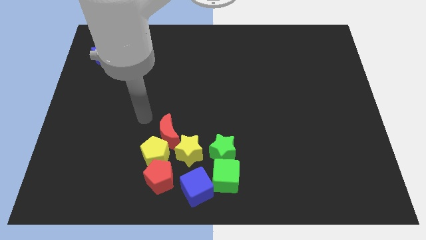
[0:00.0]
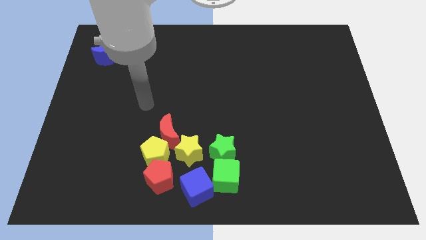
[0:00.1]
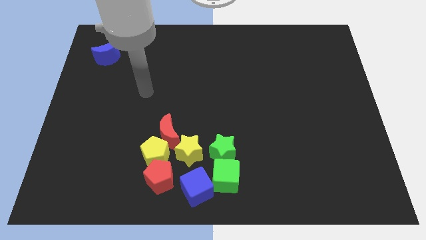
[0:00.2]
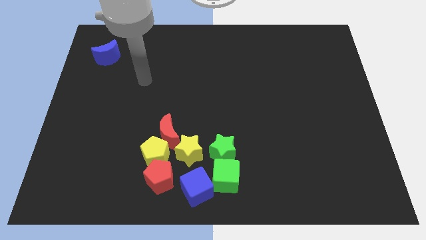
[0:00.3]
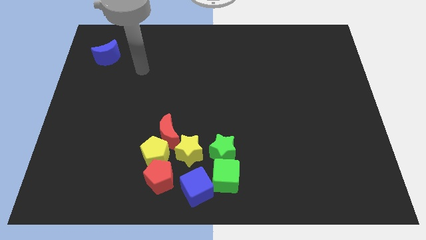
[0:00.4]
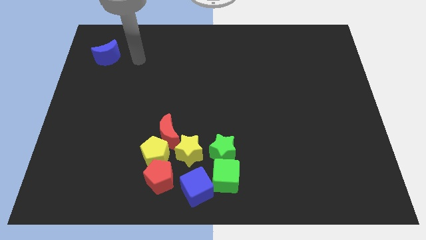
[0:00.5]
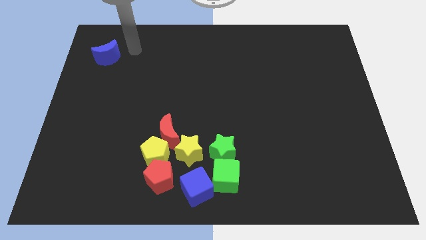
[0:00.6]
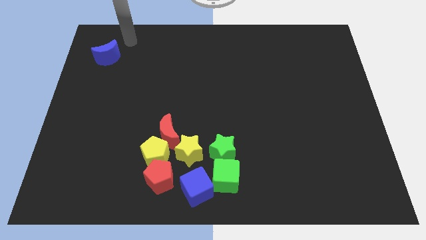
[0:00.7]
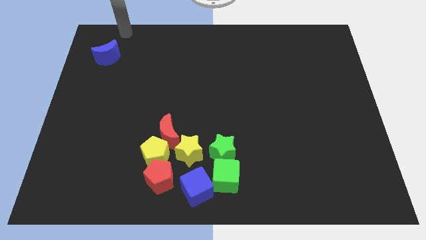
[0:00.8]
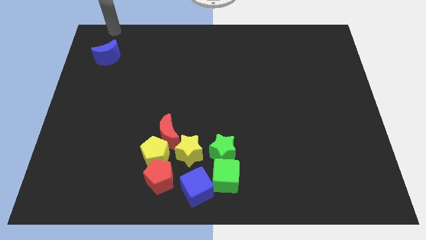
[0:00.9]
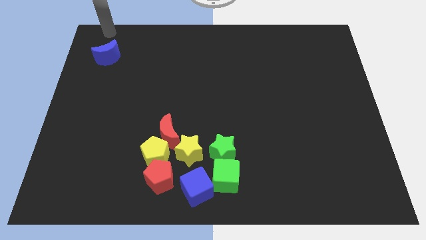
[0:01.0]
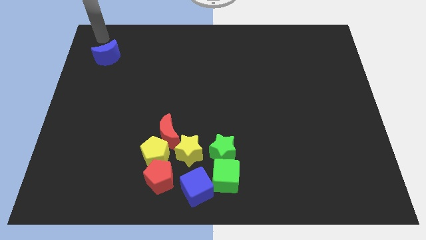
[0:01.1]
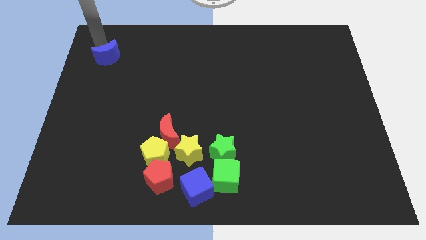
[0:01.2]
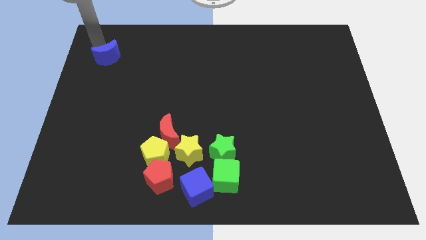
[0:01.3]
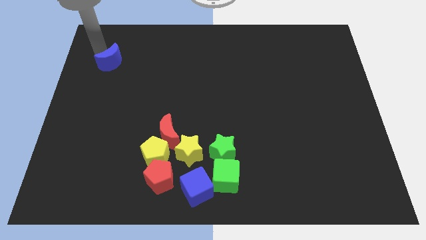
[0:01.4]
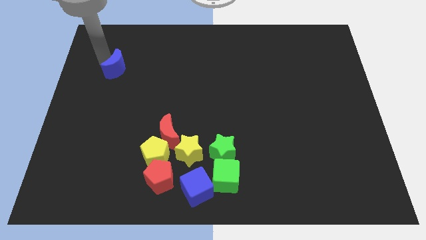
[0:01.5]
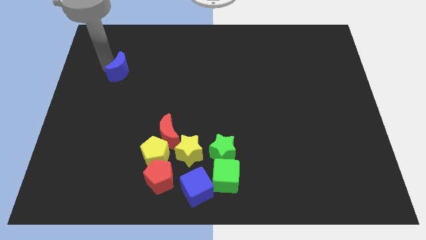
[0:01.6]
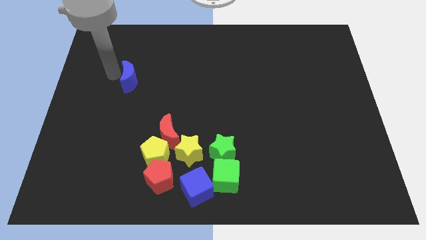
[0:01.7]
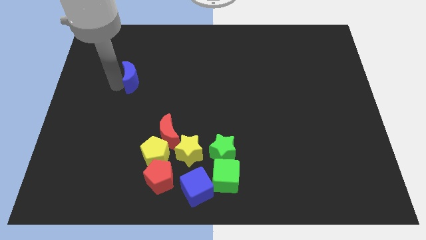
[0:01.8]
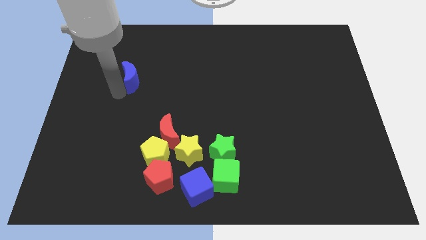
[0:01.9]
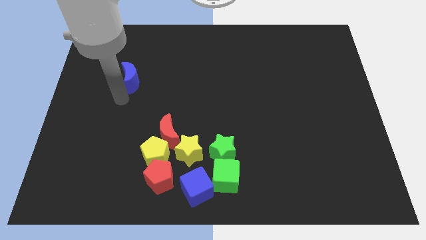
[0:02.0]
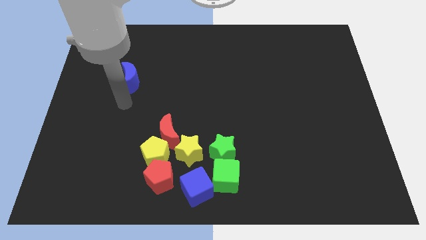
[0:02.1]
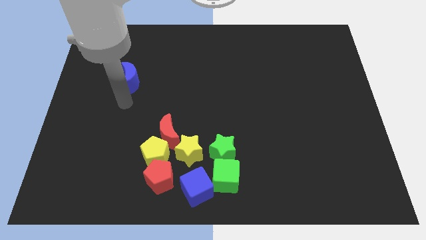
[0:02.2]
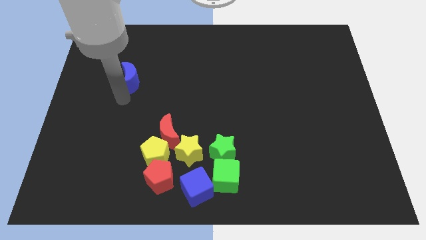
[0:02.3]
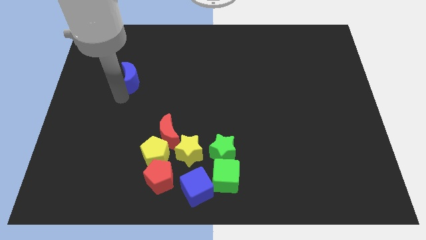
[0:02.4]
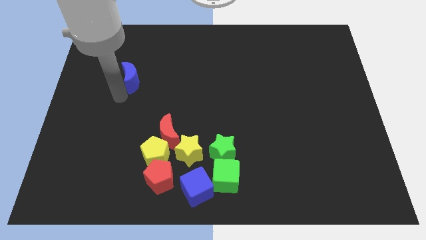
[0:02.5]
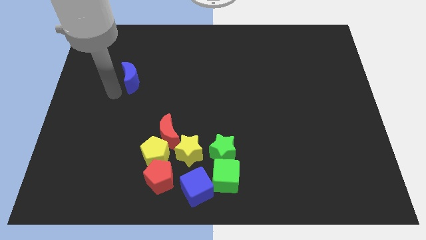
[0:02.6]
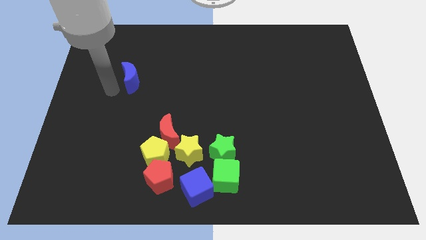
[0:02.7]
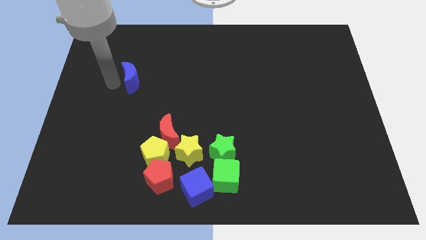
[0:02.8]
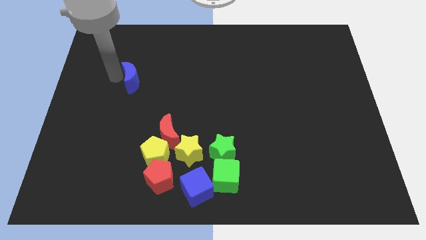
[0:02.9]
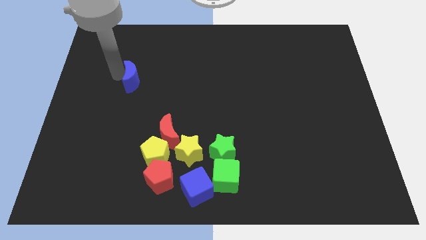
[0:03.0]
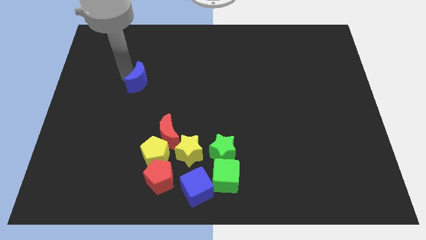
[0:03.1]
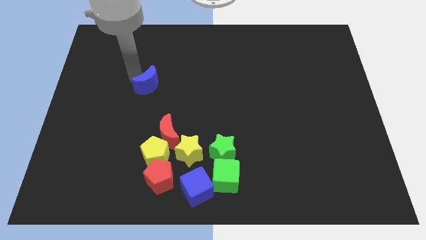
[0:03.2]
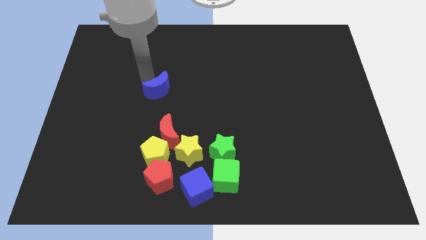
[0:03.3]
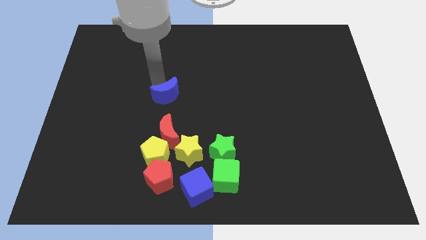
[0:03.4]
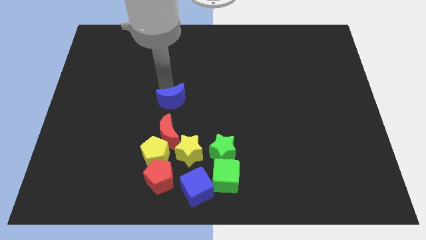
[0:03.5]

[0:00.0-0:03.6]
place the blue crescent above the red moon

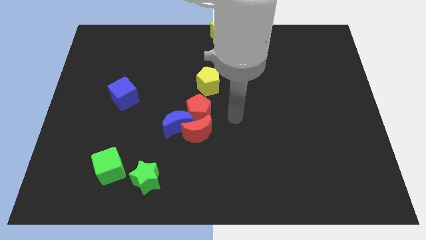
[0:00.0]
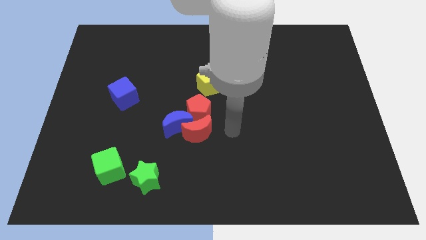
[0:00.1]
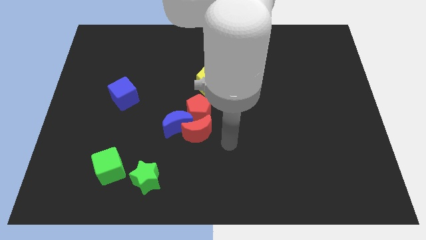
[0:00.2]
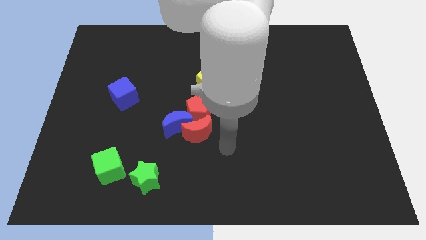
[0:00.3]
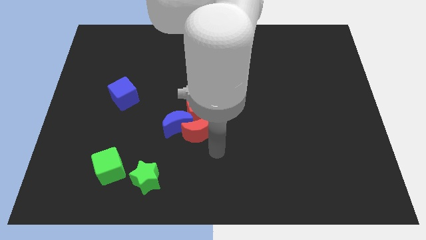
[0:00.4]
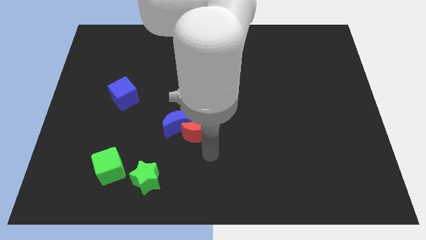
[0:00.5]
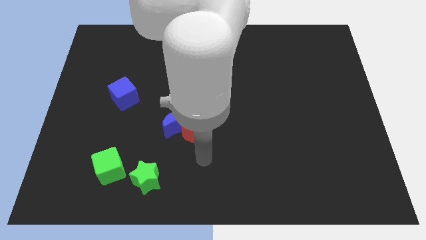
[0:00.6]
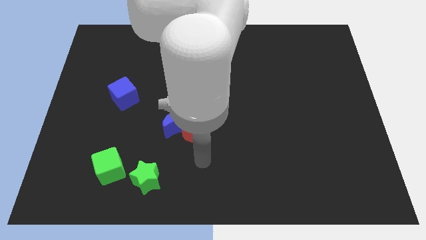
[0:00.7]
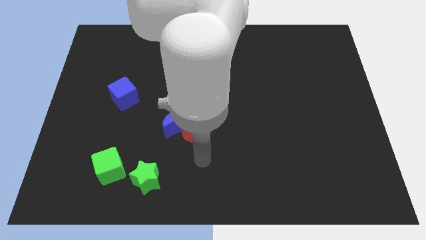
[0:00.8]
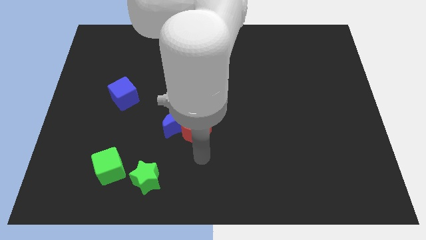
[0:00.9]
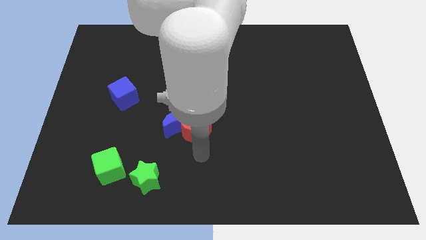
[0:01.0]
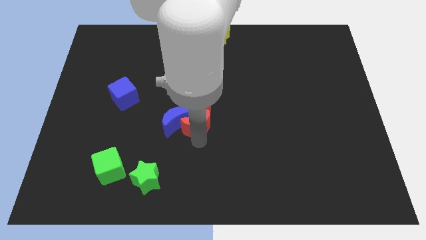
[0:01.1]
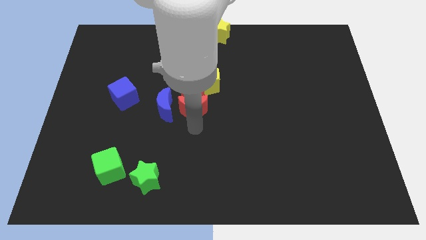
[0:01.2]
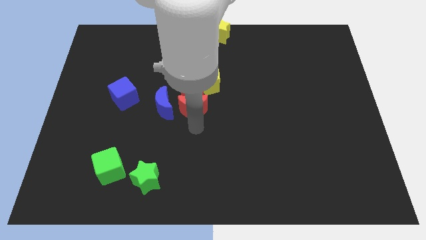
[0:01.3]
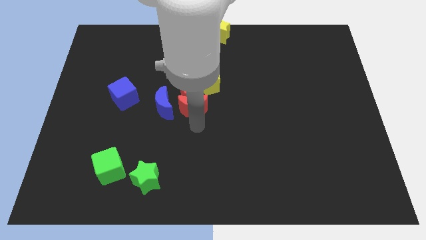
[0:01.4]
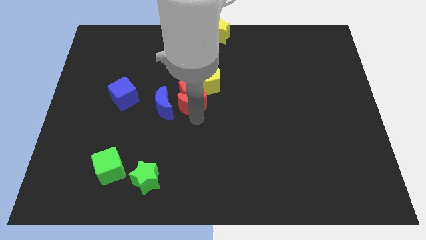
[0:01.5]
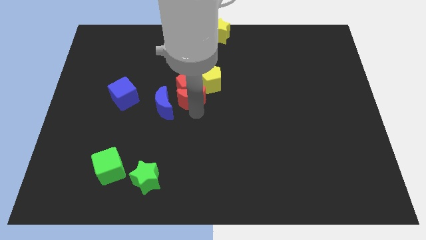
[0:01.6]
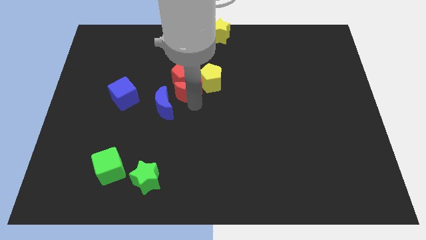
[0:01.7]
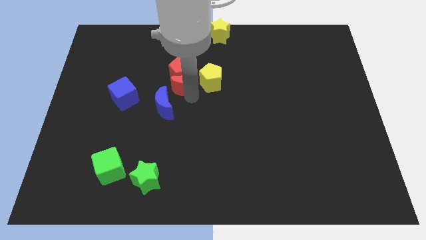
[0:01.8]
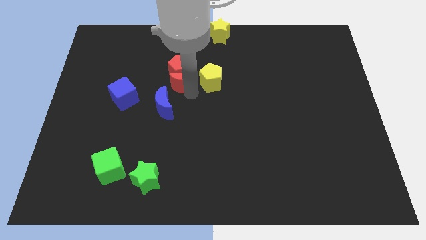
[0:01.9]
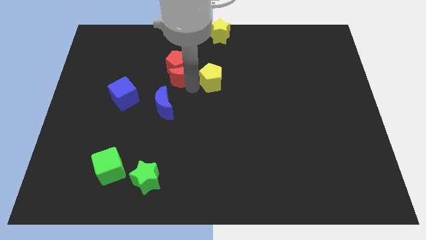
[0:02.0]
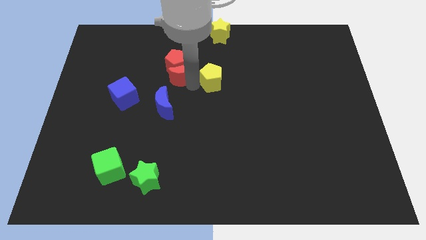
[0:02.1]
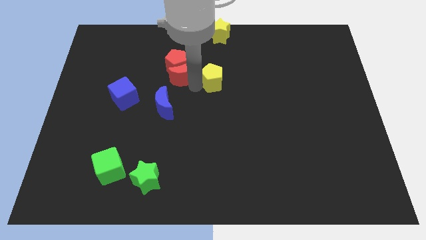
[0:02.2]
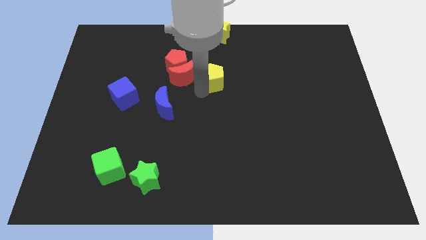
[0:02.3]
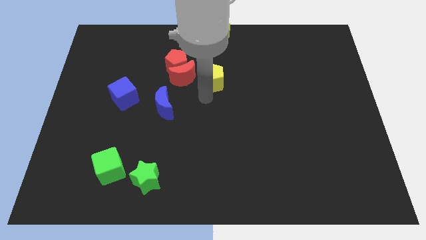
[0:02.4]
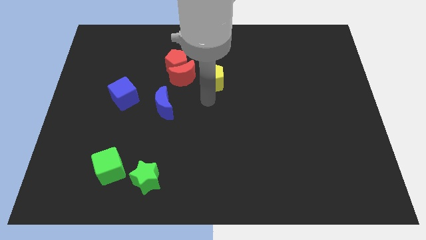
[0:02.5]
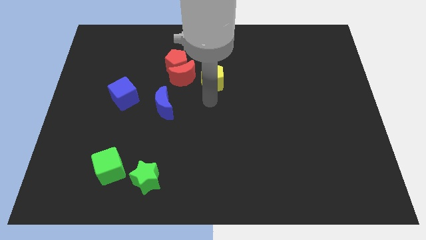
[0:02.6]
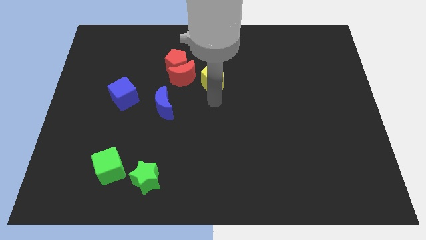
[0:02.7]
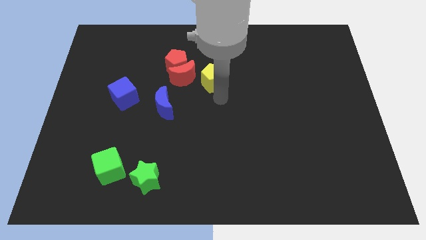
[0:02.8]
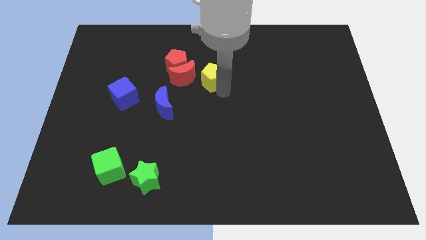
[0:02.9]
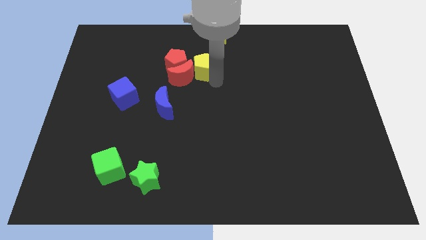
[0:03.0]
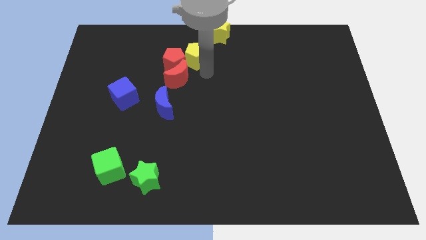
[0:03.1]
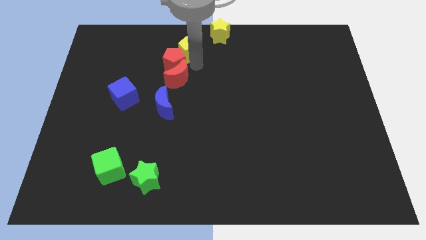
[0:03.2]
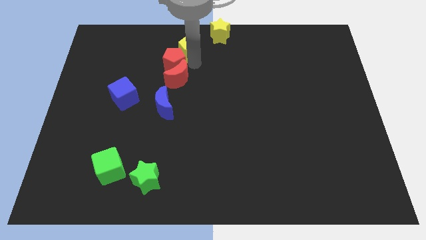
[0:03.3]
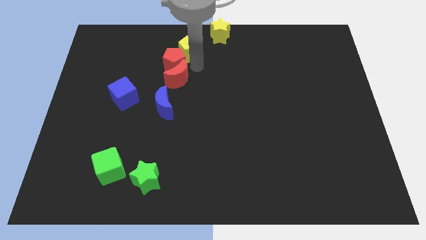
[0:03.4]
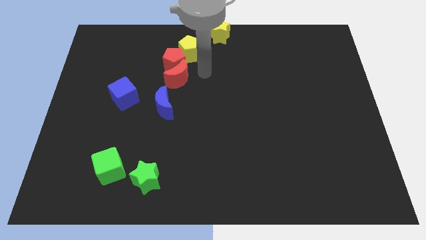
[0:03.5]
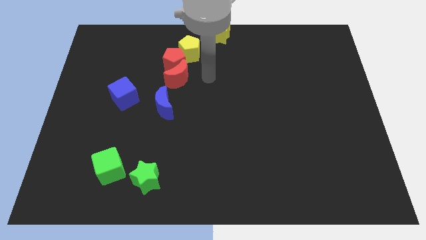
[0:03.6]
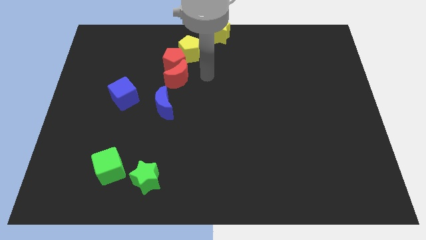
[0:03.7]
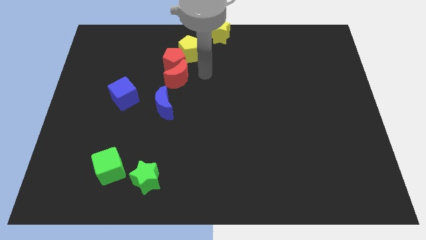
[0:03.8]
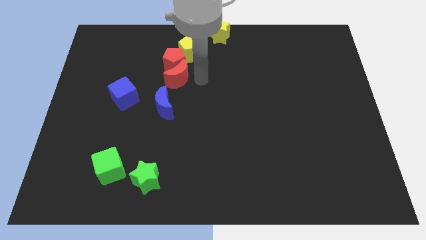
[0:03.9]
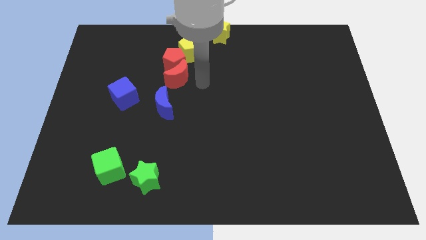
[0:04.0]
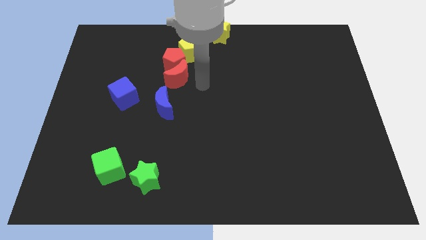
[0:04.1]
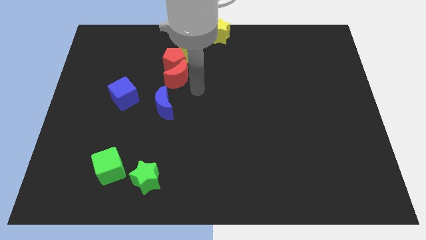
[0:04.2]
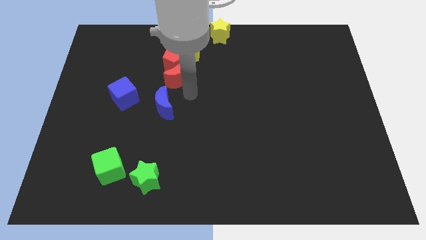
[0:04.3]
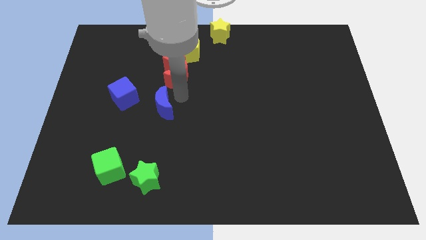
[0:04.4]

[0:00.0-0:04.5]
move the group of red blocks upwards

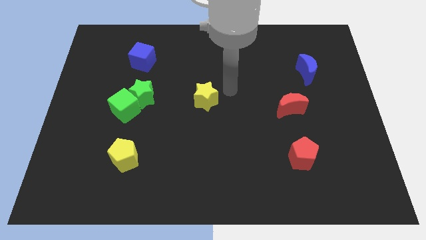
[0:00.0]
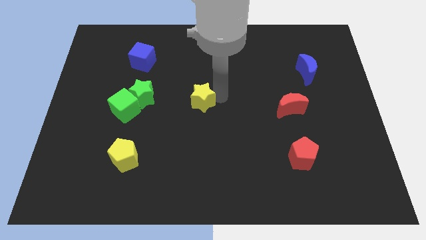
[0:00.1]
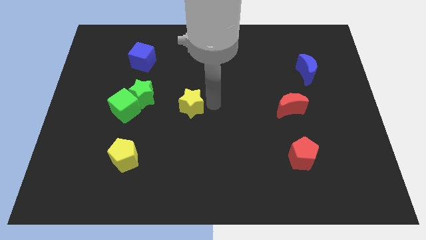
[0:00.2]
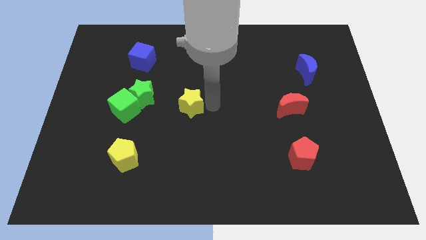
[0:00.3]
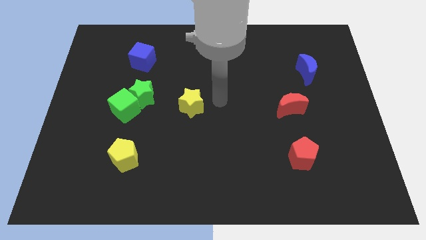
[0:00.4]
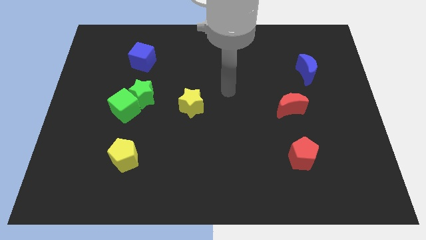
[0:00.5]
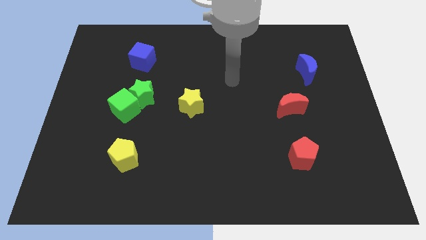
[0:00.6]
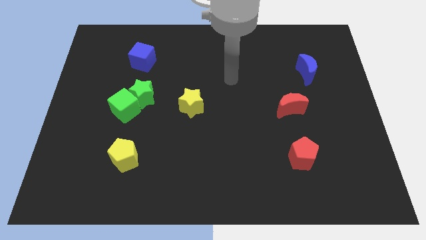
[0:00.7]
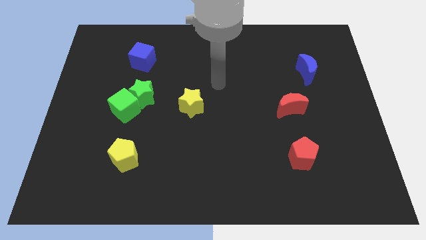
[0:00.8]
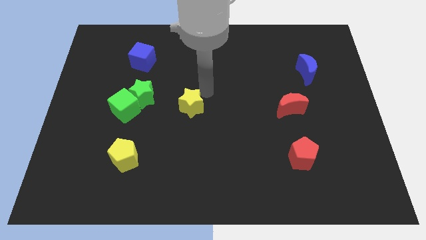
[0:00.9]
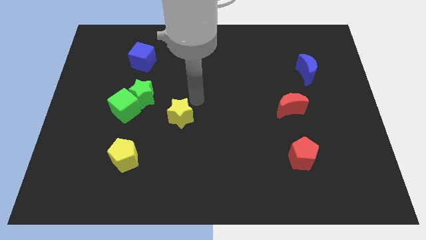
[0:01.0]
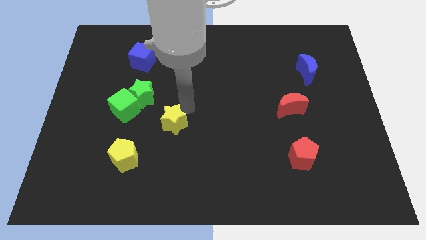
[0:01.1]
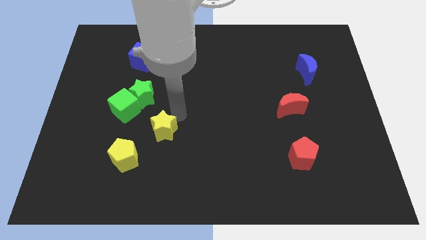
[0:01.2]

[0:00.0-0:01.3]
move the yellow star towards the yellow pentagon
